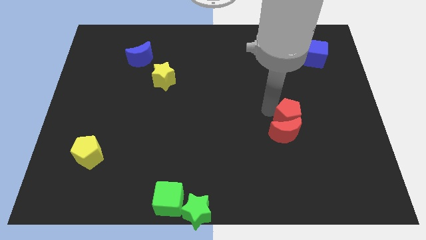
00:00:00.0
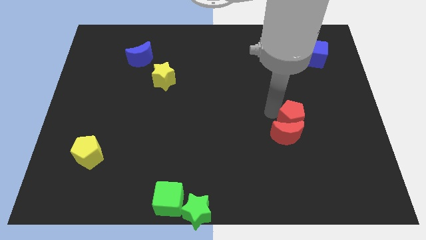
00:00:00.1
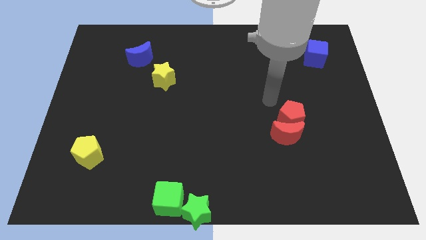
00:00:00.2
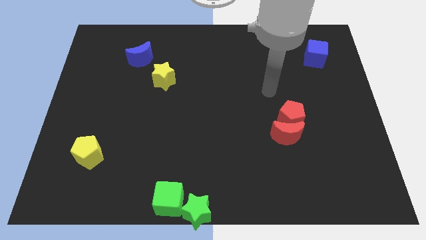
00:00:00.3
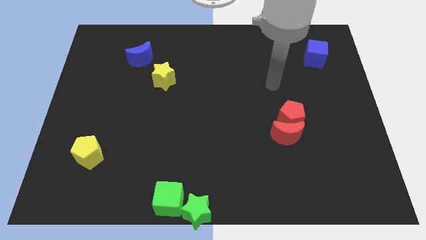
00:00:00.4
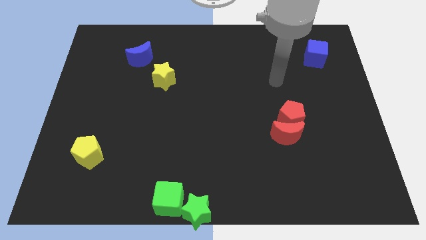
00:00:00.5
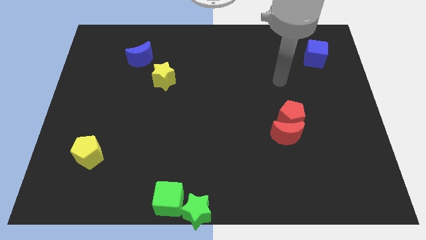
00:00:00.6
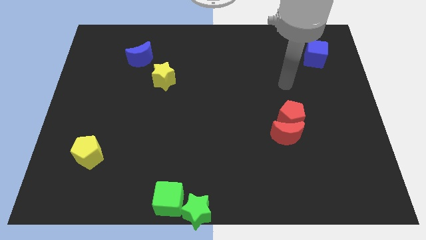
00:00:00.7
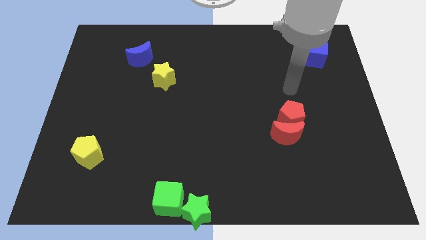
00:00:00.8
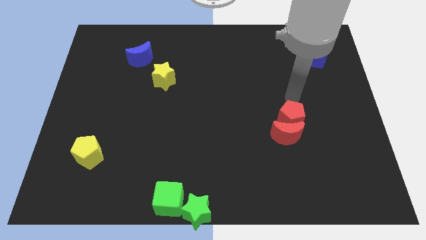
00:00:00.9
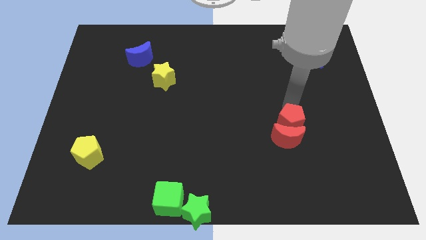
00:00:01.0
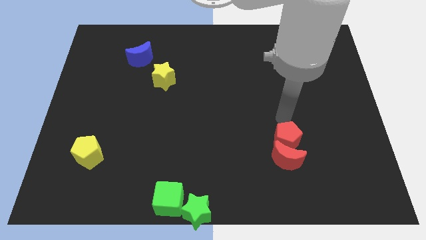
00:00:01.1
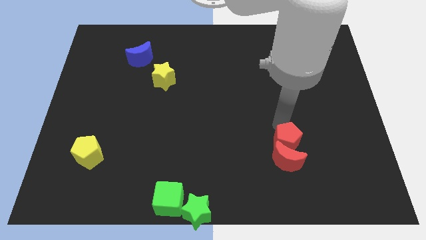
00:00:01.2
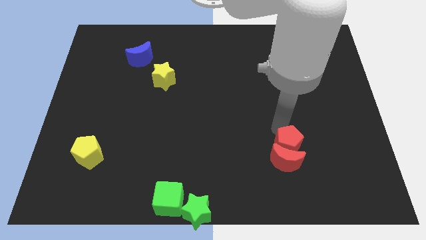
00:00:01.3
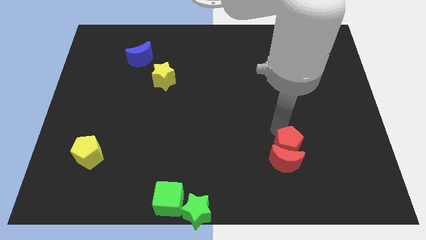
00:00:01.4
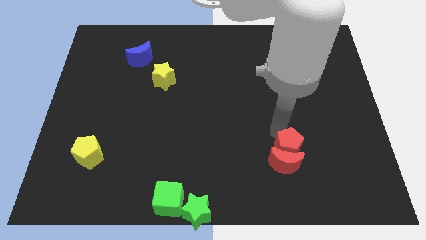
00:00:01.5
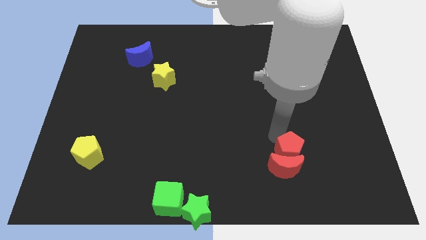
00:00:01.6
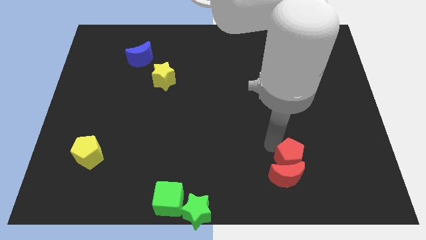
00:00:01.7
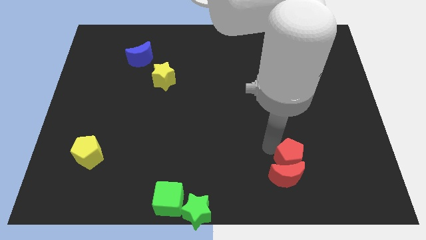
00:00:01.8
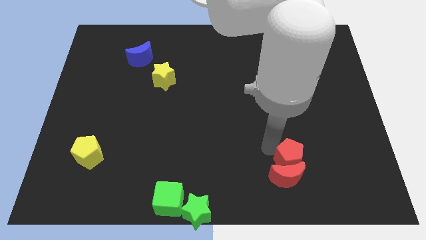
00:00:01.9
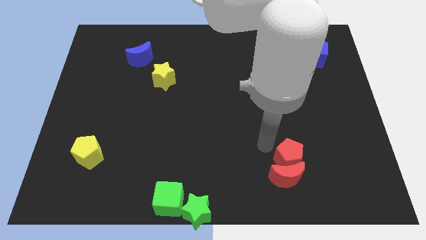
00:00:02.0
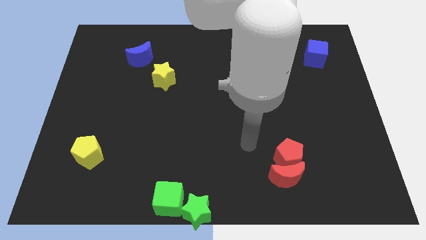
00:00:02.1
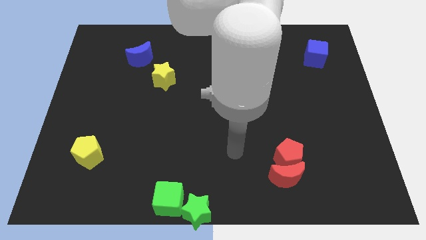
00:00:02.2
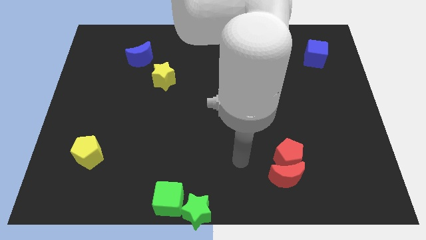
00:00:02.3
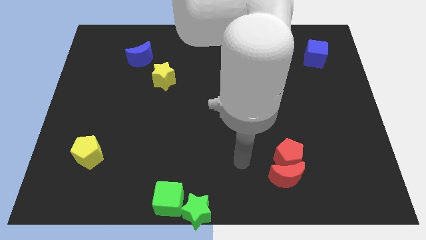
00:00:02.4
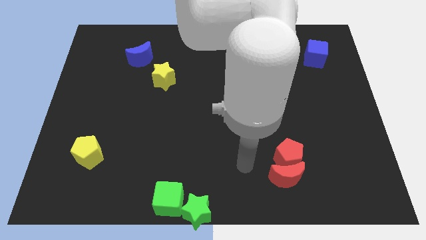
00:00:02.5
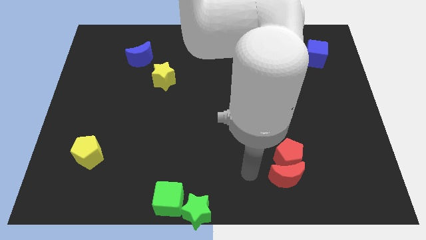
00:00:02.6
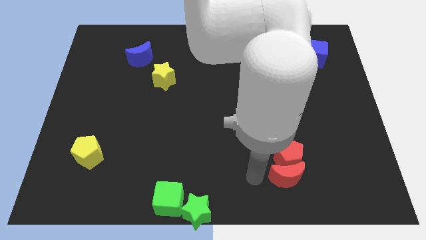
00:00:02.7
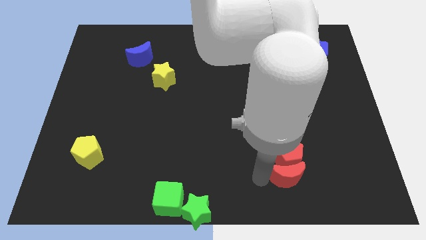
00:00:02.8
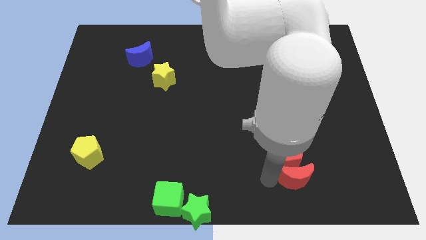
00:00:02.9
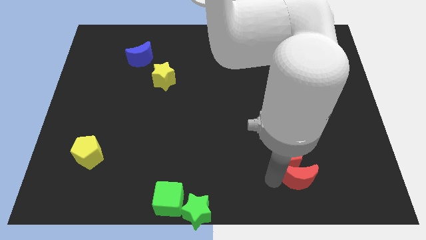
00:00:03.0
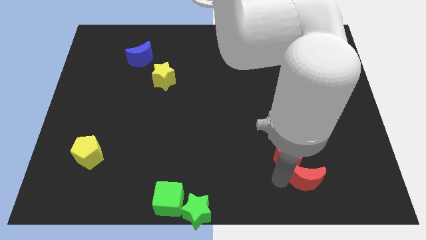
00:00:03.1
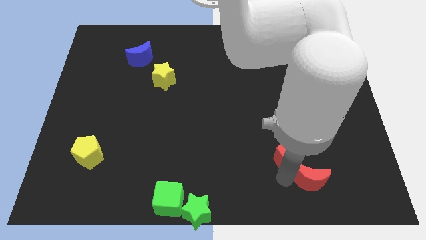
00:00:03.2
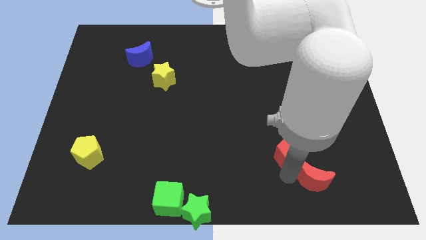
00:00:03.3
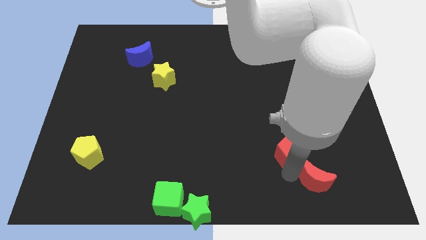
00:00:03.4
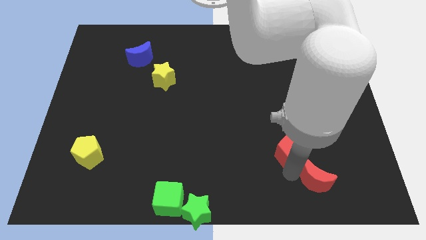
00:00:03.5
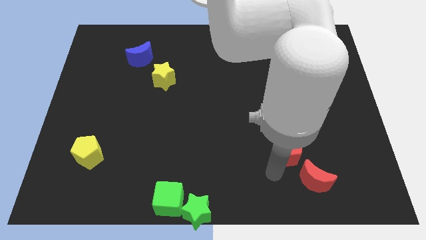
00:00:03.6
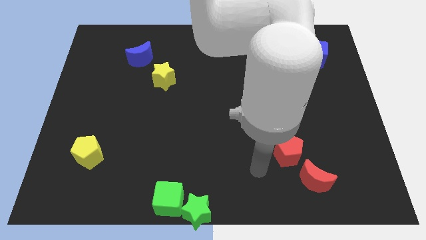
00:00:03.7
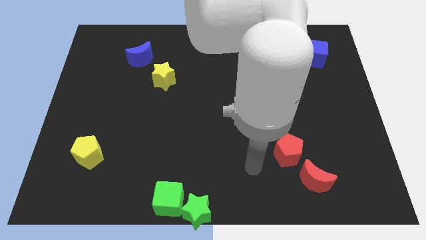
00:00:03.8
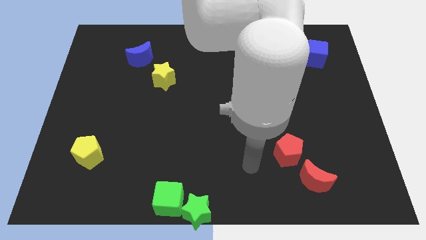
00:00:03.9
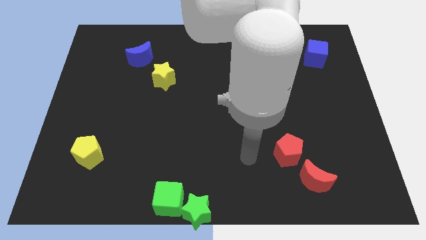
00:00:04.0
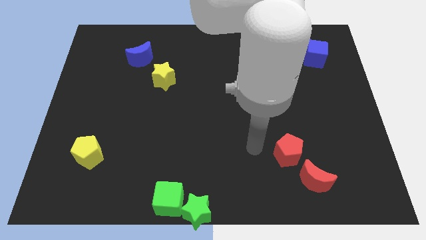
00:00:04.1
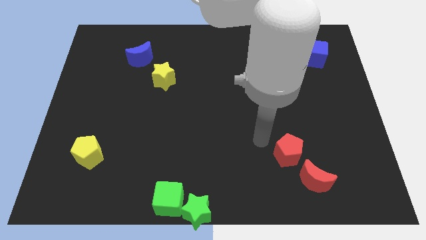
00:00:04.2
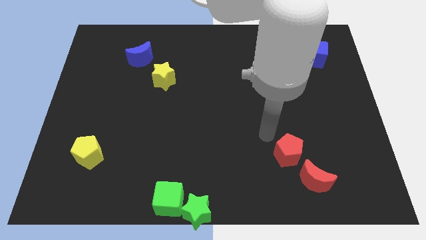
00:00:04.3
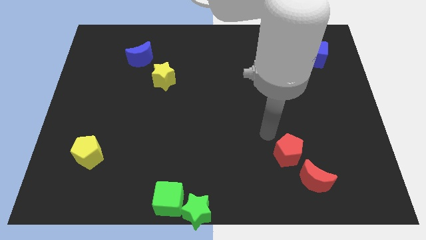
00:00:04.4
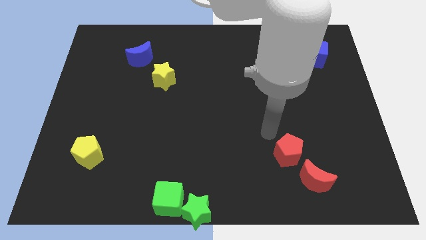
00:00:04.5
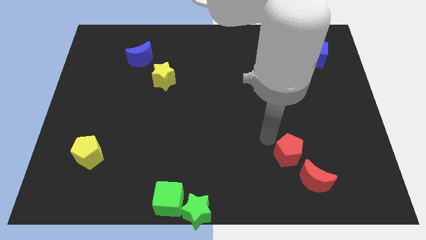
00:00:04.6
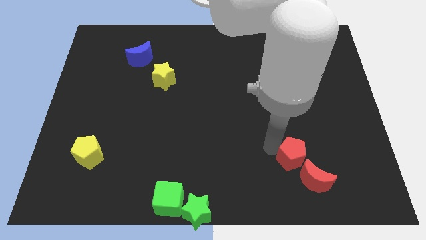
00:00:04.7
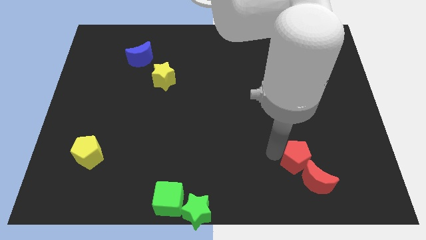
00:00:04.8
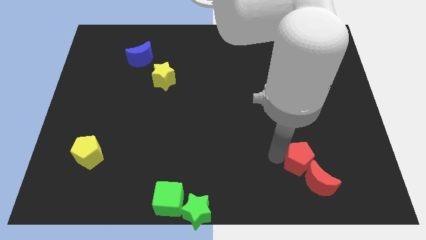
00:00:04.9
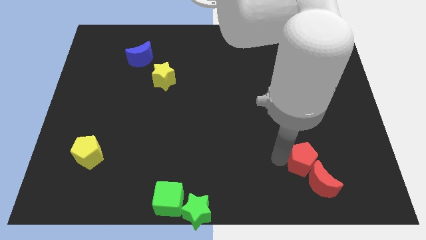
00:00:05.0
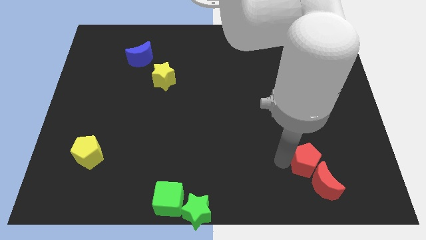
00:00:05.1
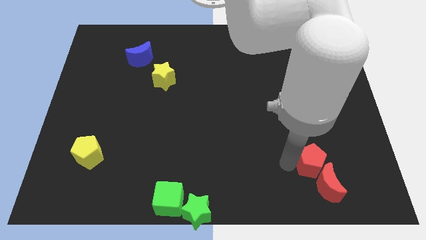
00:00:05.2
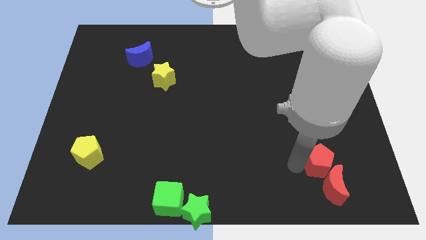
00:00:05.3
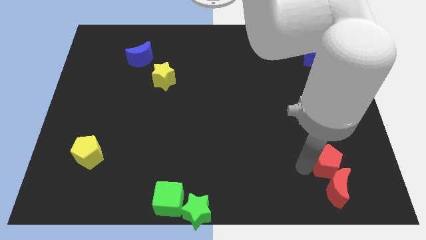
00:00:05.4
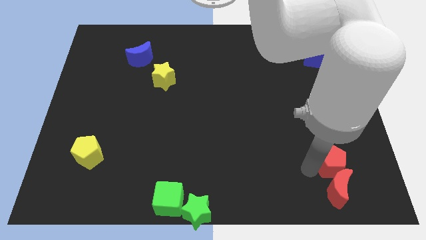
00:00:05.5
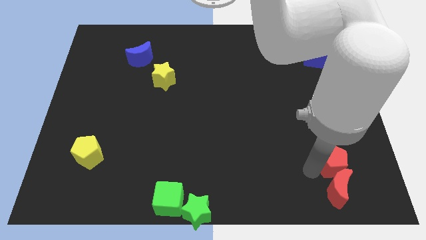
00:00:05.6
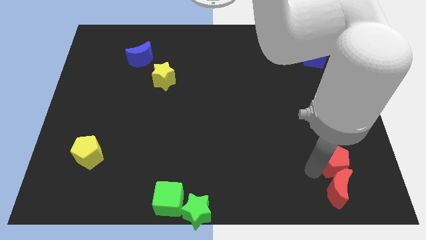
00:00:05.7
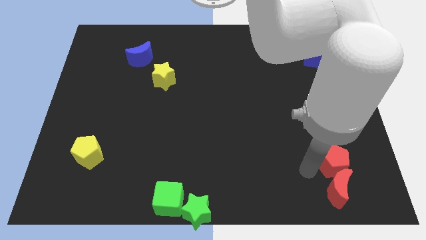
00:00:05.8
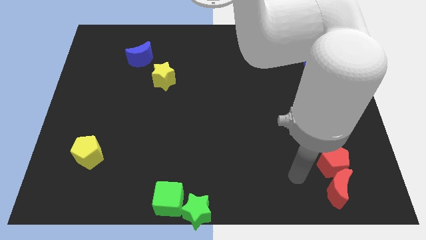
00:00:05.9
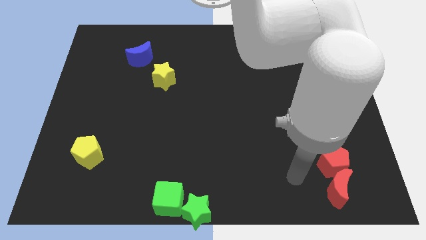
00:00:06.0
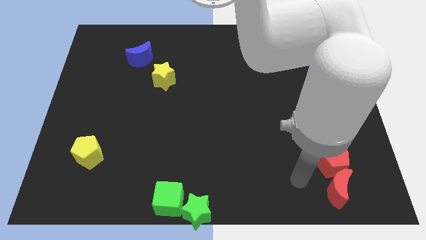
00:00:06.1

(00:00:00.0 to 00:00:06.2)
push both the red blocks towards the bottom right corner of the board

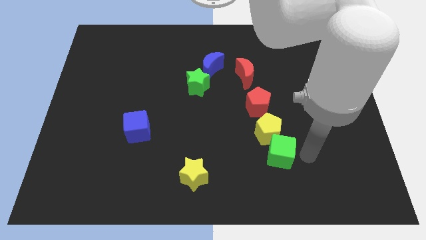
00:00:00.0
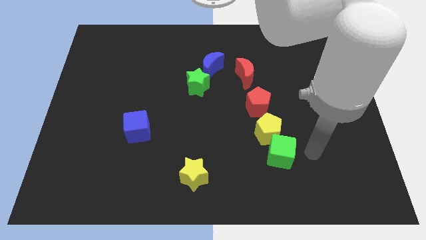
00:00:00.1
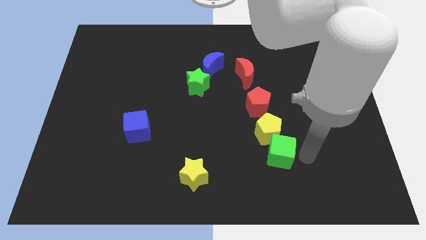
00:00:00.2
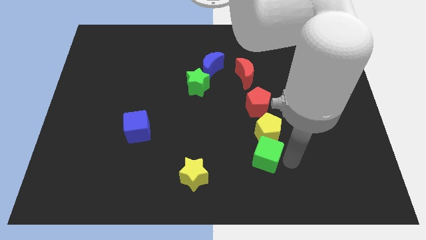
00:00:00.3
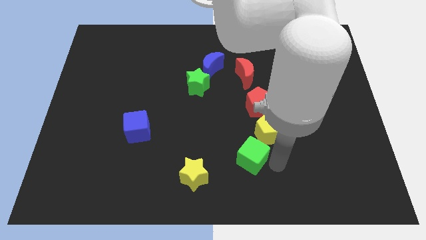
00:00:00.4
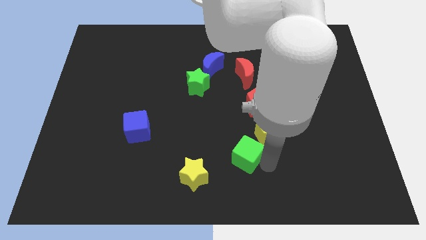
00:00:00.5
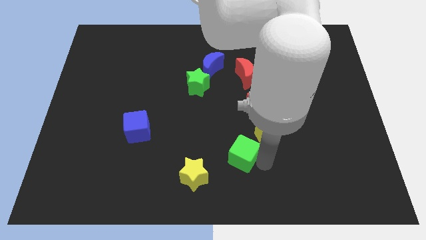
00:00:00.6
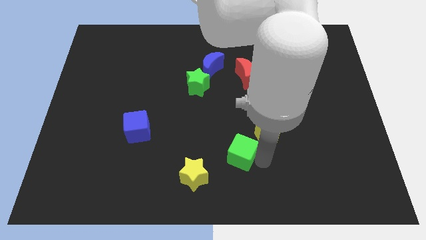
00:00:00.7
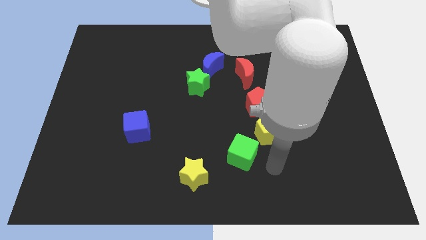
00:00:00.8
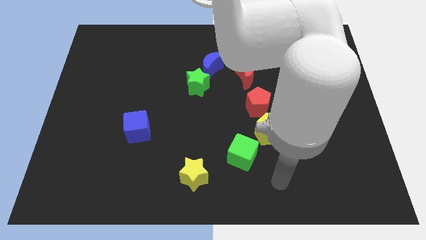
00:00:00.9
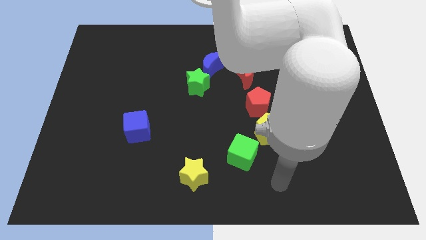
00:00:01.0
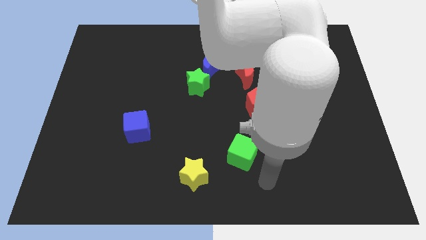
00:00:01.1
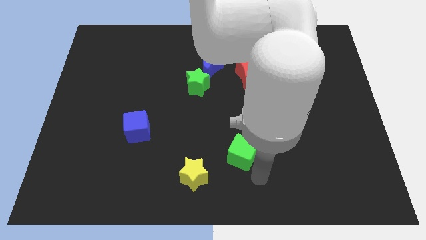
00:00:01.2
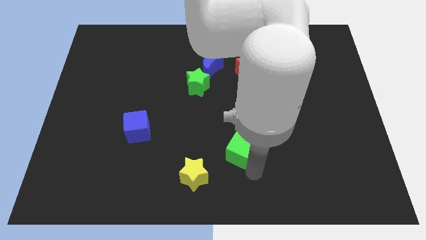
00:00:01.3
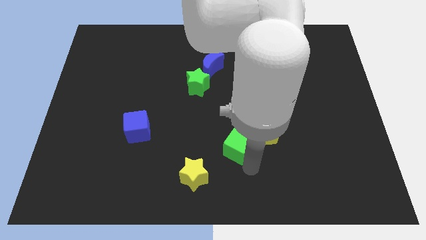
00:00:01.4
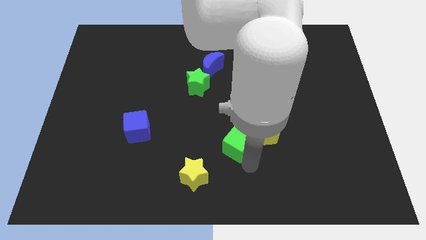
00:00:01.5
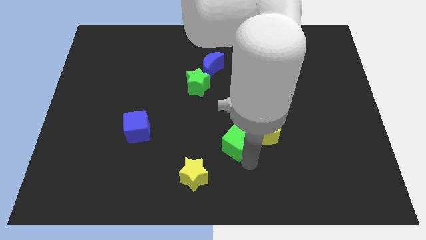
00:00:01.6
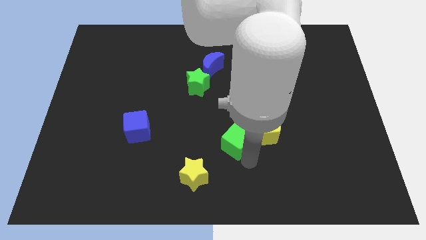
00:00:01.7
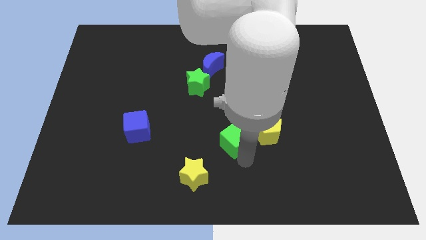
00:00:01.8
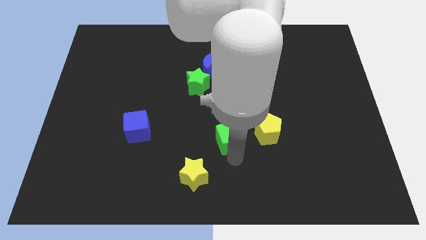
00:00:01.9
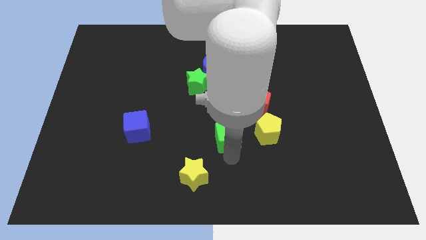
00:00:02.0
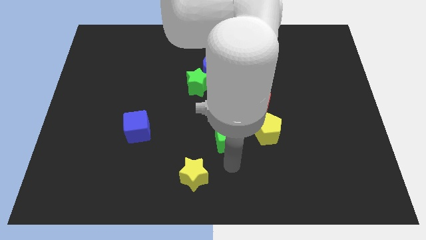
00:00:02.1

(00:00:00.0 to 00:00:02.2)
place the green cube to the left of the yellow pentagon

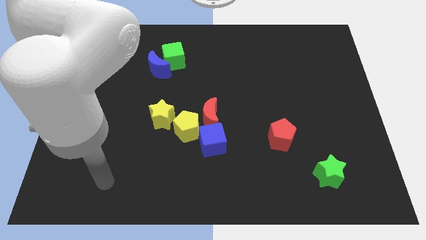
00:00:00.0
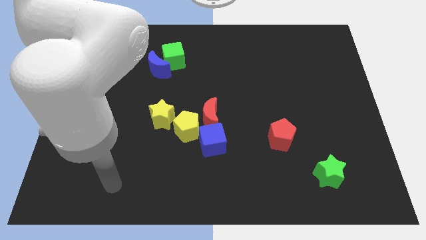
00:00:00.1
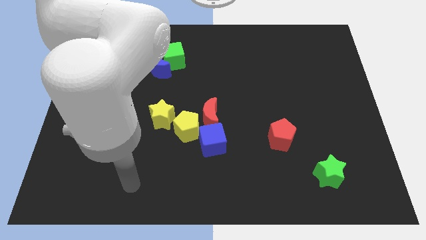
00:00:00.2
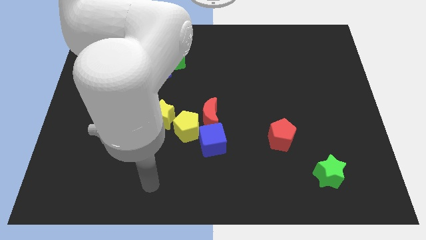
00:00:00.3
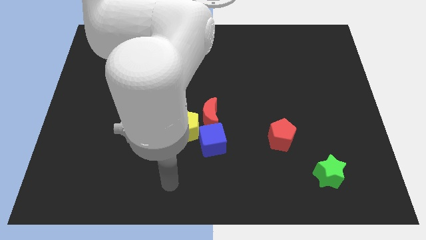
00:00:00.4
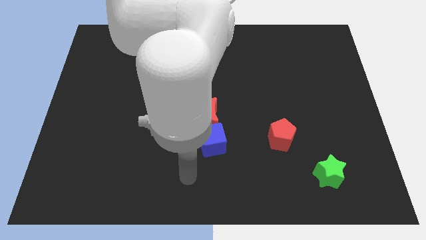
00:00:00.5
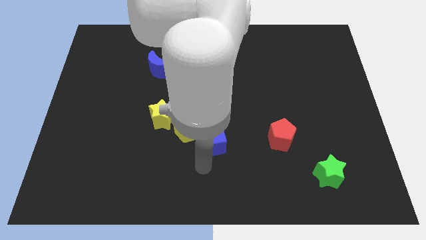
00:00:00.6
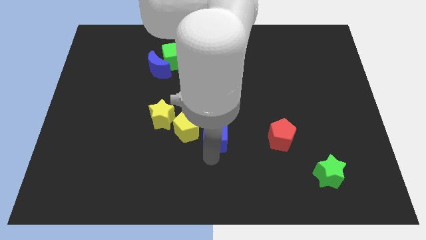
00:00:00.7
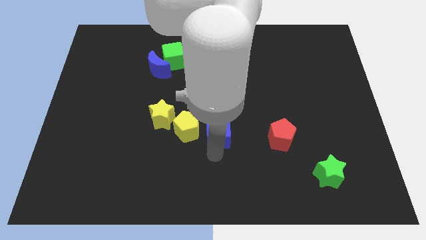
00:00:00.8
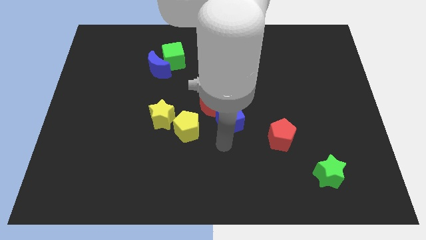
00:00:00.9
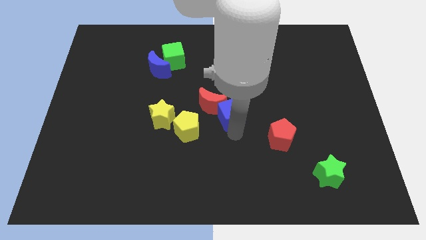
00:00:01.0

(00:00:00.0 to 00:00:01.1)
move the blue cube towards the center of the board
